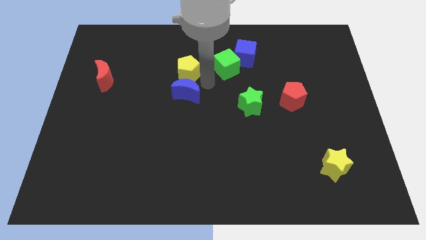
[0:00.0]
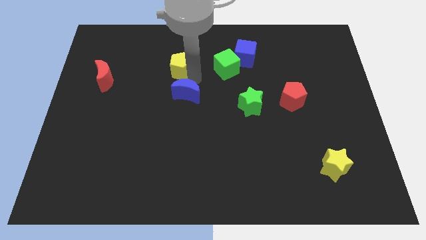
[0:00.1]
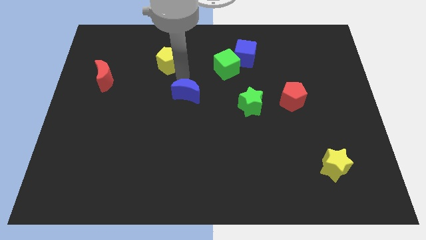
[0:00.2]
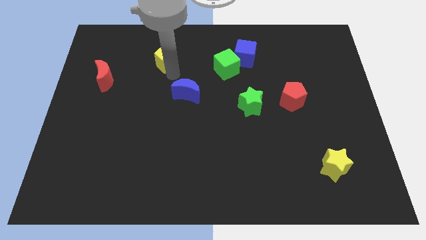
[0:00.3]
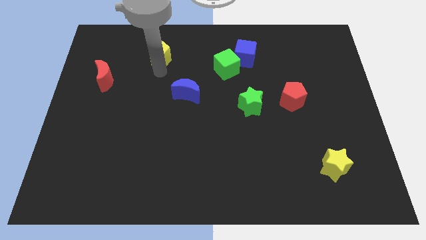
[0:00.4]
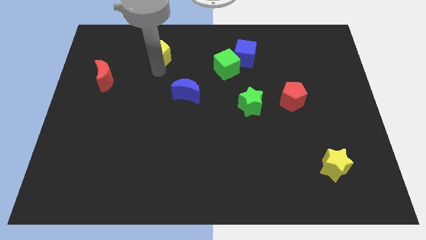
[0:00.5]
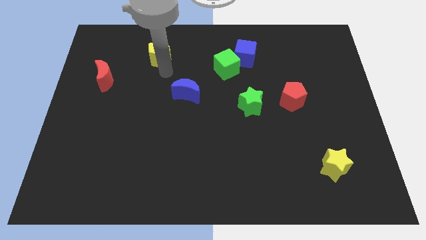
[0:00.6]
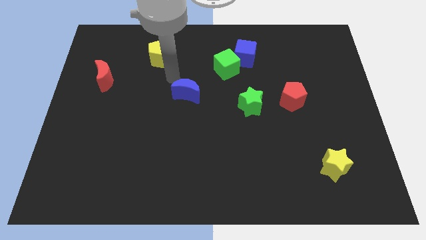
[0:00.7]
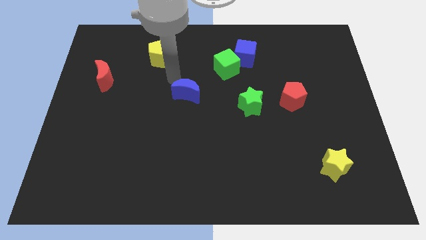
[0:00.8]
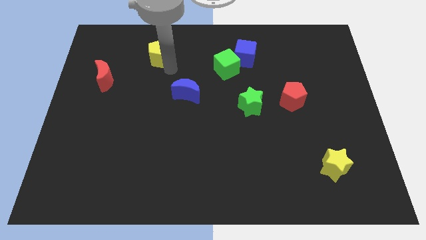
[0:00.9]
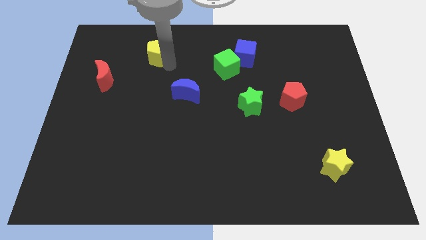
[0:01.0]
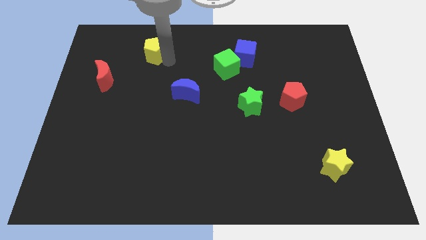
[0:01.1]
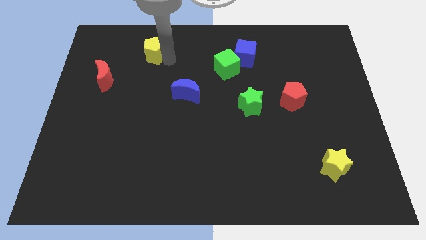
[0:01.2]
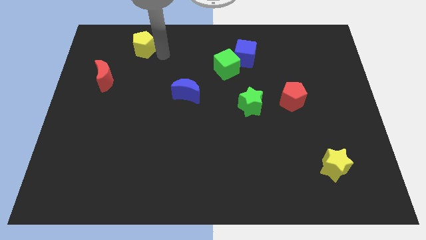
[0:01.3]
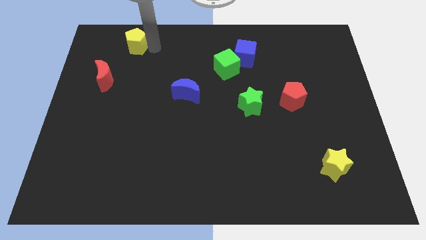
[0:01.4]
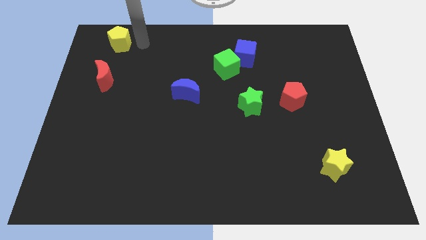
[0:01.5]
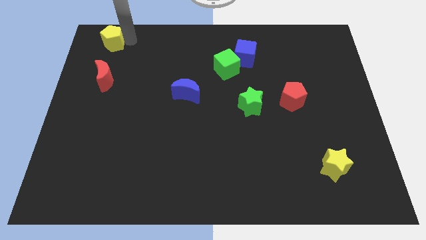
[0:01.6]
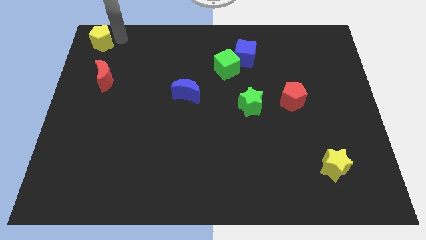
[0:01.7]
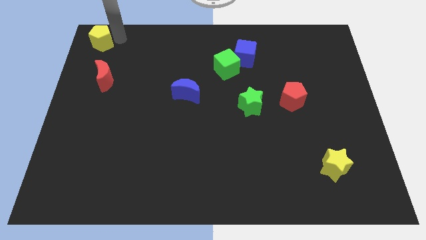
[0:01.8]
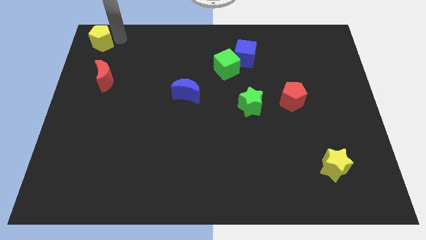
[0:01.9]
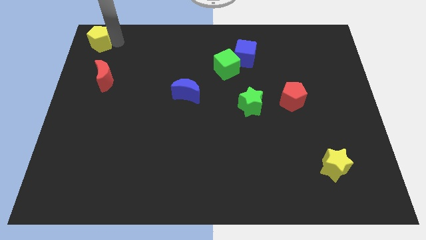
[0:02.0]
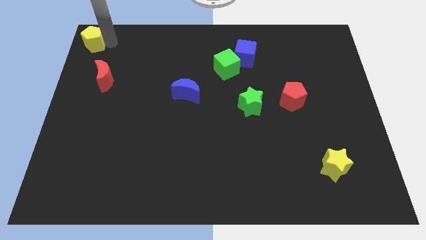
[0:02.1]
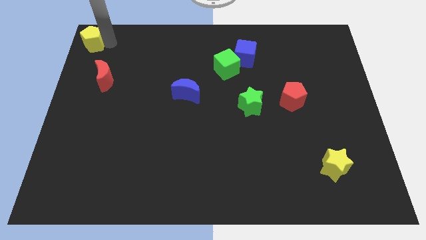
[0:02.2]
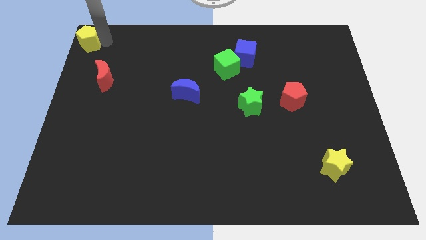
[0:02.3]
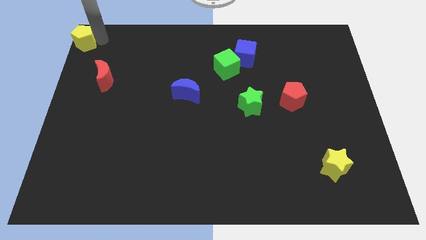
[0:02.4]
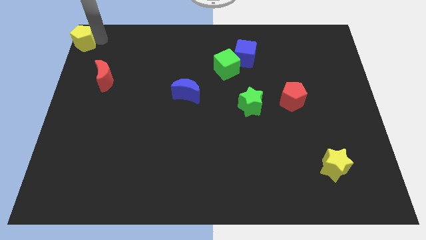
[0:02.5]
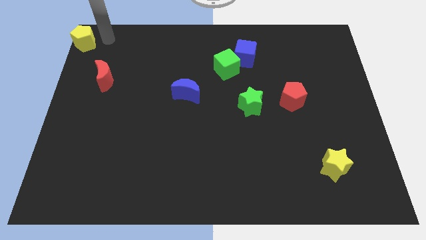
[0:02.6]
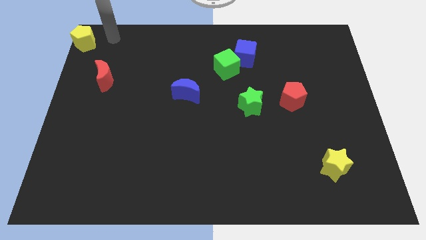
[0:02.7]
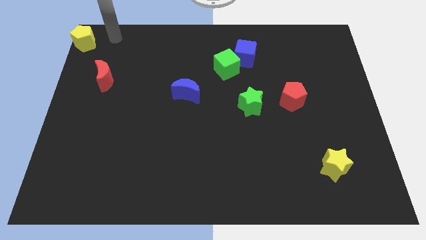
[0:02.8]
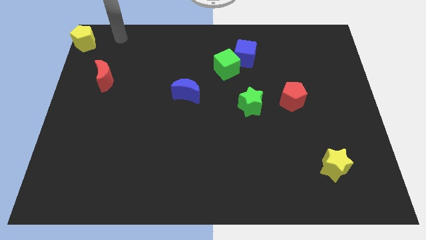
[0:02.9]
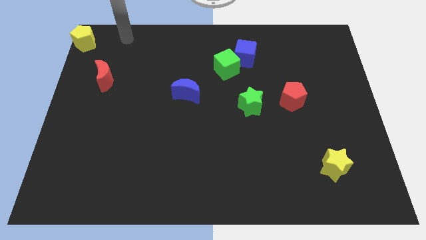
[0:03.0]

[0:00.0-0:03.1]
place the yellow pentagon at the top left corner of the board

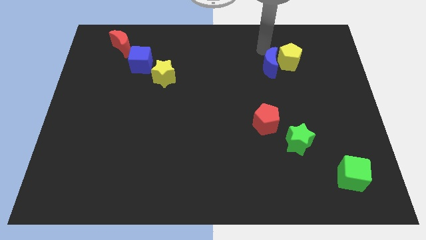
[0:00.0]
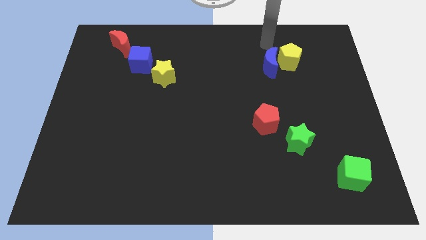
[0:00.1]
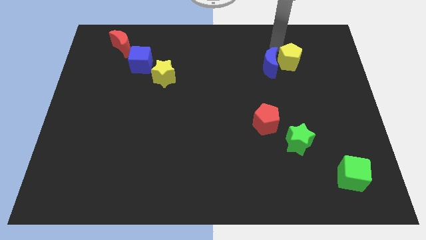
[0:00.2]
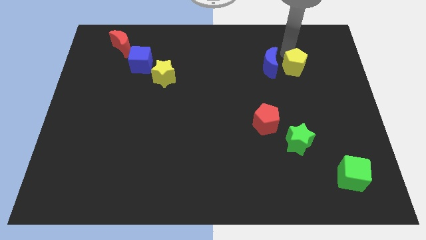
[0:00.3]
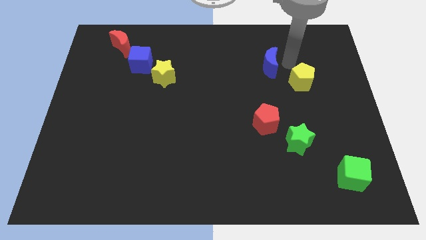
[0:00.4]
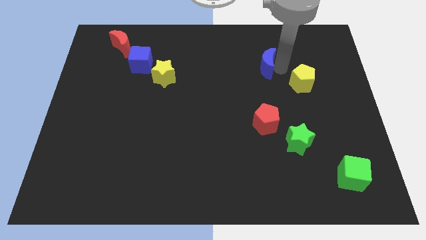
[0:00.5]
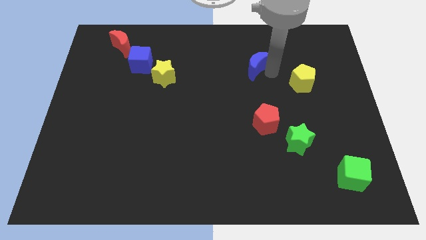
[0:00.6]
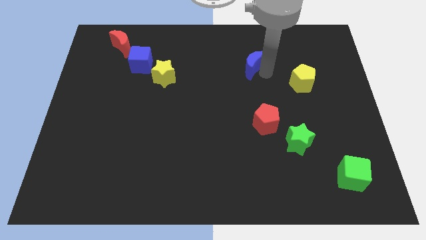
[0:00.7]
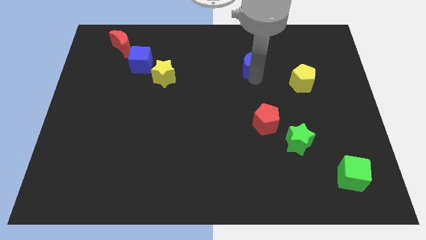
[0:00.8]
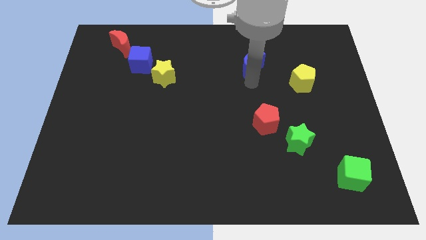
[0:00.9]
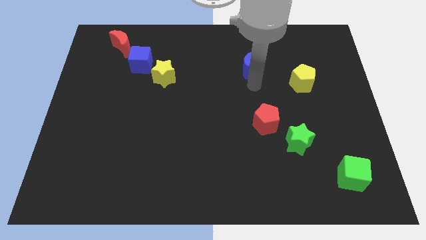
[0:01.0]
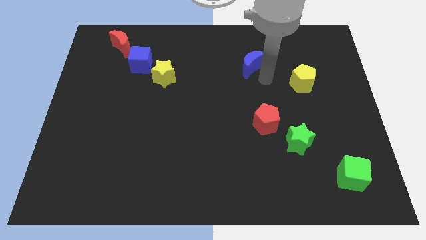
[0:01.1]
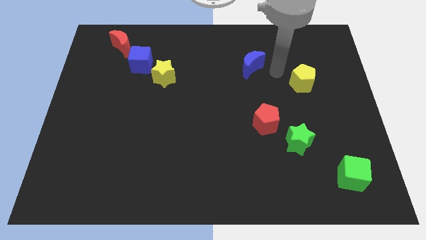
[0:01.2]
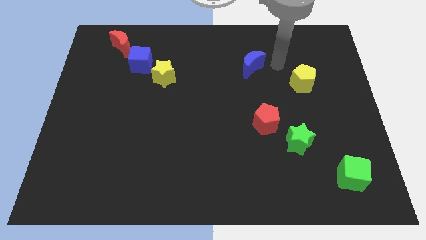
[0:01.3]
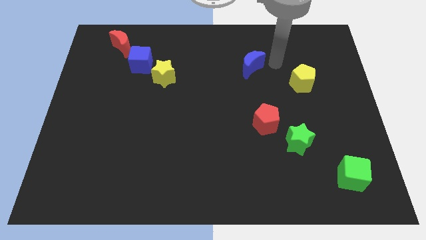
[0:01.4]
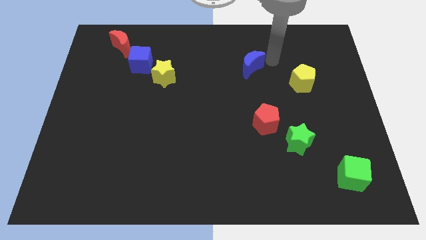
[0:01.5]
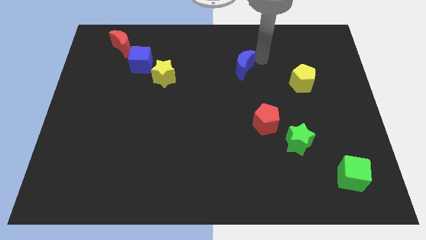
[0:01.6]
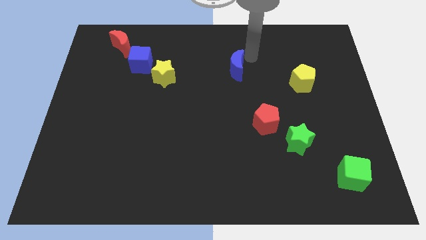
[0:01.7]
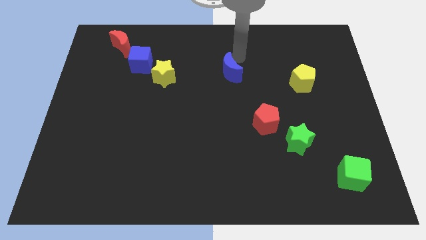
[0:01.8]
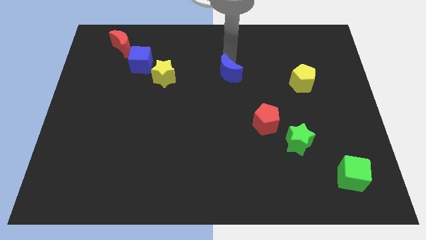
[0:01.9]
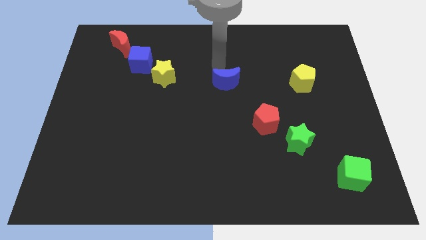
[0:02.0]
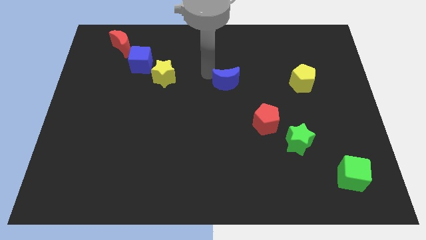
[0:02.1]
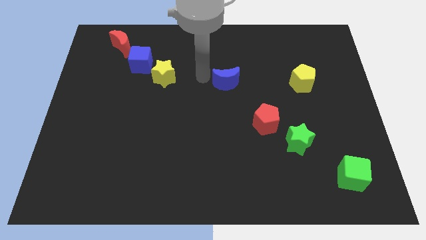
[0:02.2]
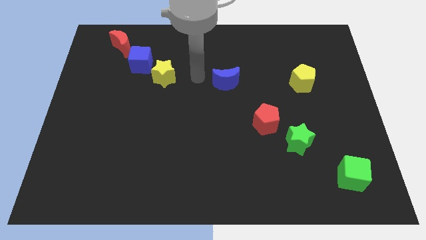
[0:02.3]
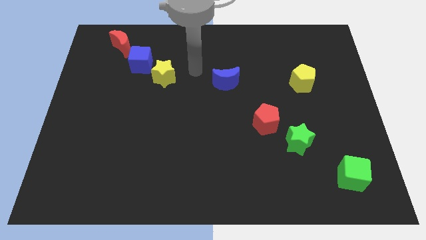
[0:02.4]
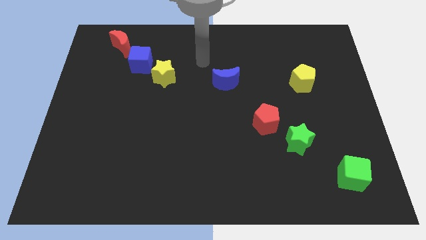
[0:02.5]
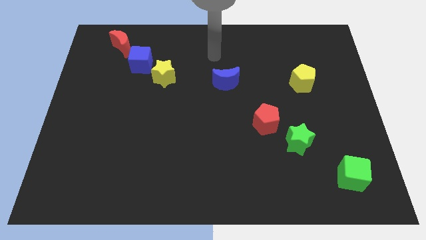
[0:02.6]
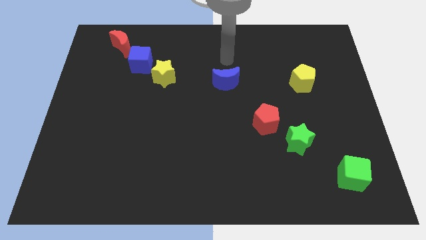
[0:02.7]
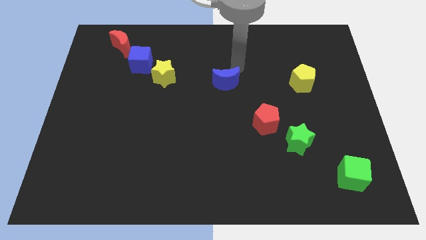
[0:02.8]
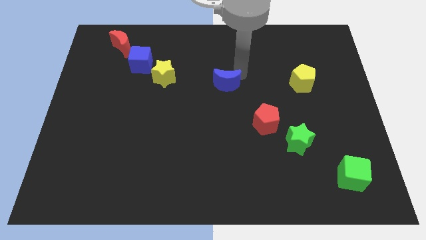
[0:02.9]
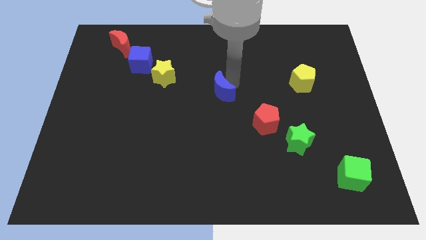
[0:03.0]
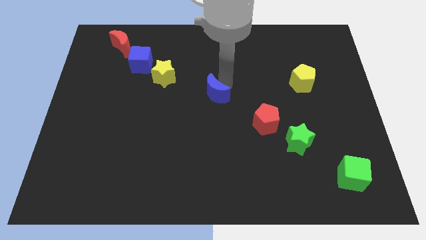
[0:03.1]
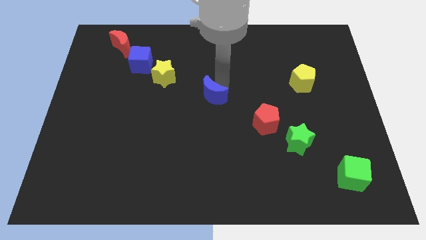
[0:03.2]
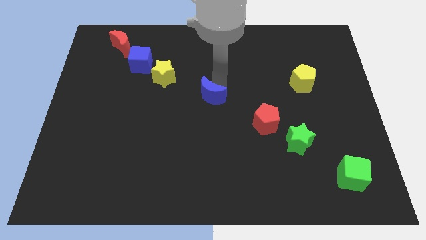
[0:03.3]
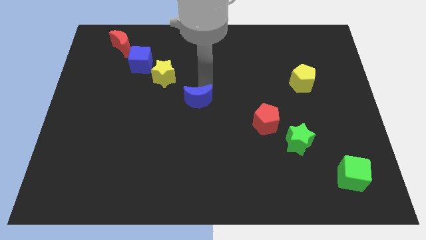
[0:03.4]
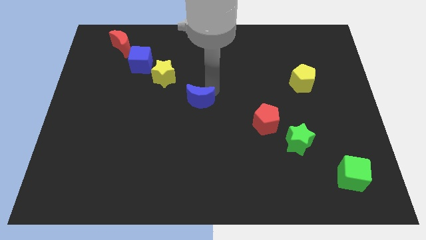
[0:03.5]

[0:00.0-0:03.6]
place the blue moon in between the yellow star and red pentagon

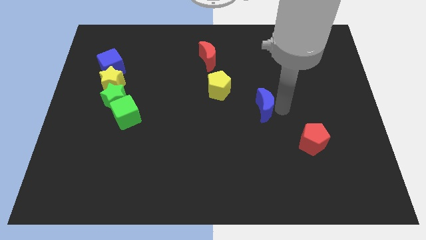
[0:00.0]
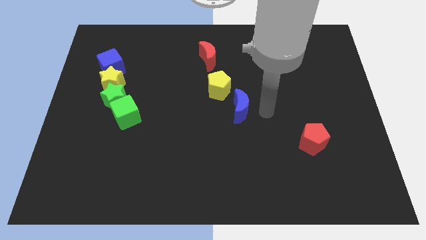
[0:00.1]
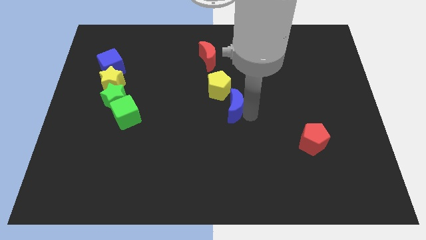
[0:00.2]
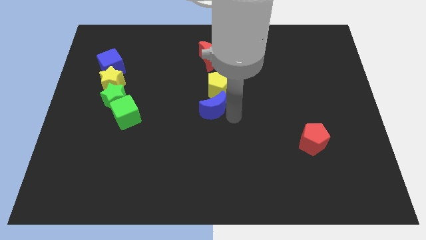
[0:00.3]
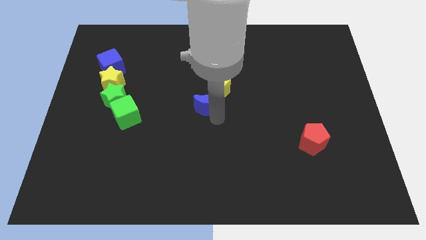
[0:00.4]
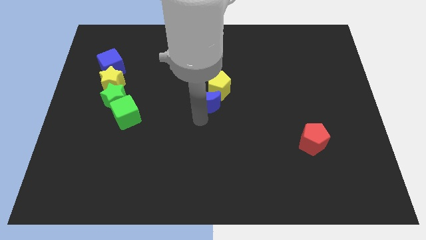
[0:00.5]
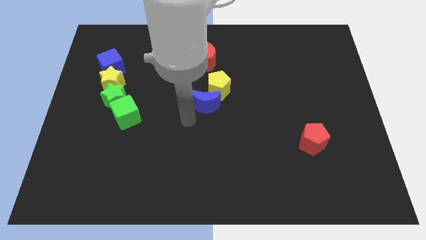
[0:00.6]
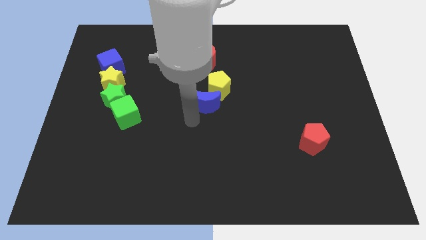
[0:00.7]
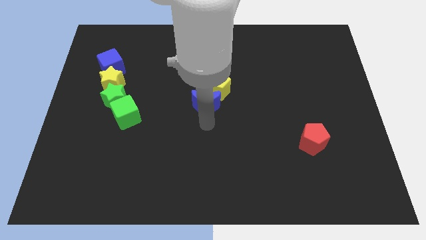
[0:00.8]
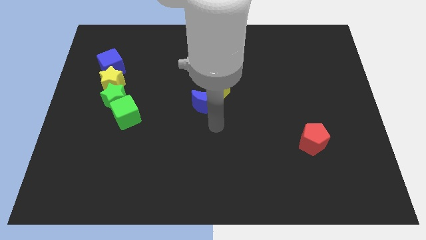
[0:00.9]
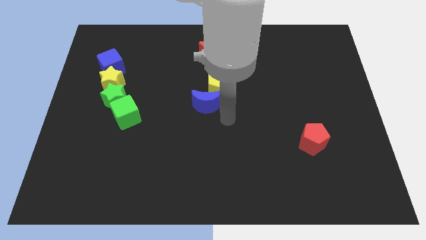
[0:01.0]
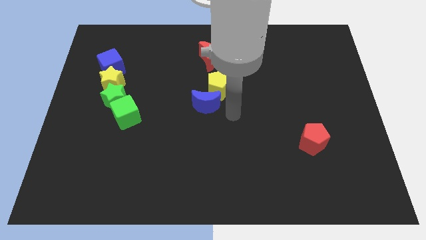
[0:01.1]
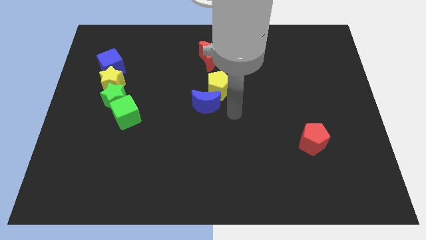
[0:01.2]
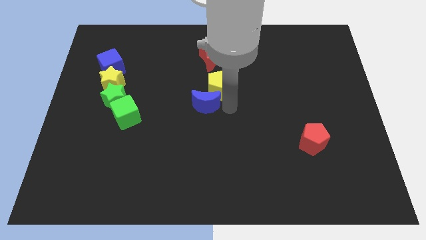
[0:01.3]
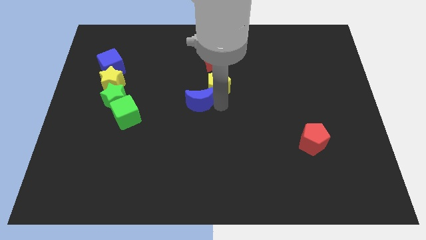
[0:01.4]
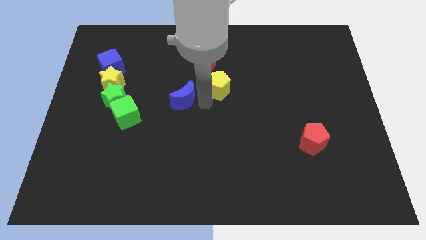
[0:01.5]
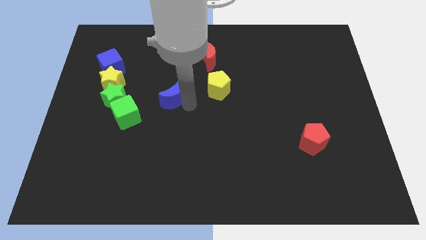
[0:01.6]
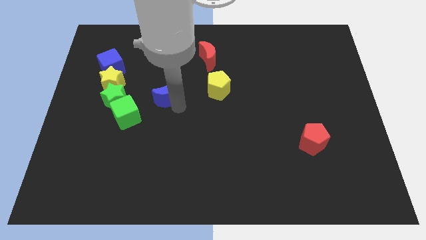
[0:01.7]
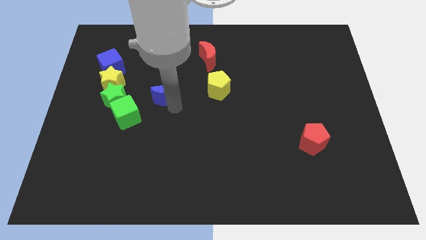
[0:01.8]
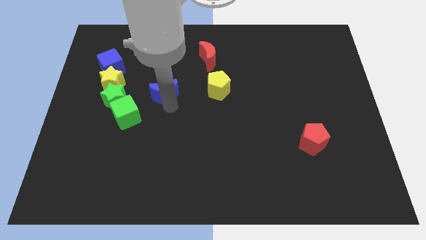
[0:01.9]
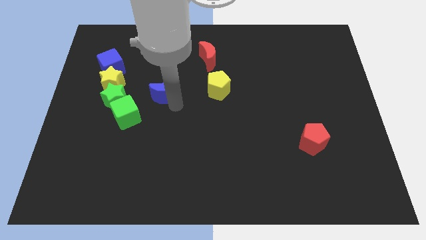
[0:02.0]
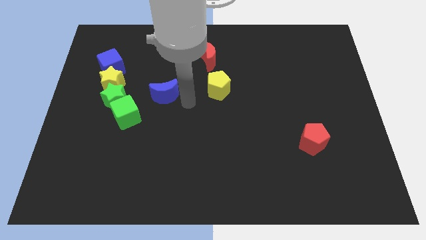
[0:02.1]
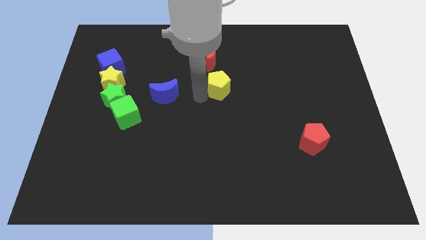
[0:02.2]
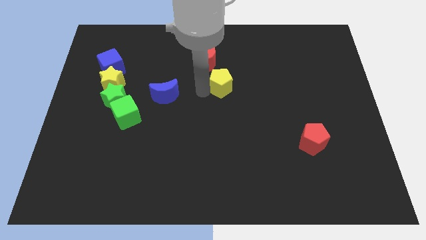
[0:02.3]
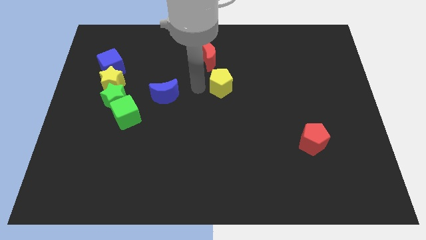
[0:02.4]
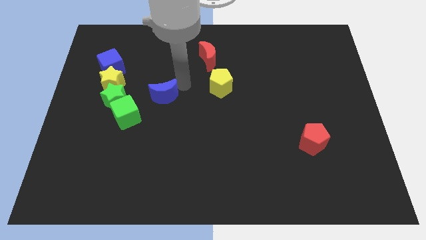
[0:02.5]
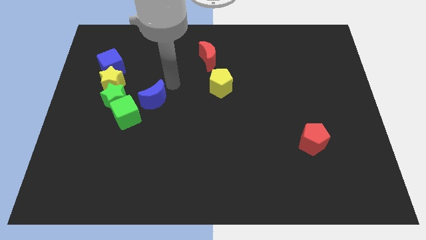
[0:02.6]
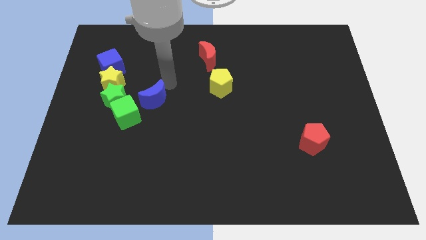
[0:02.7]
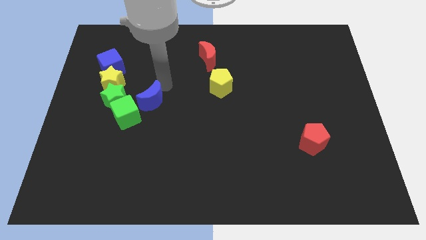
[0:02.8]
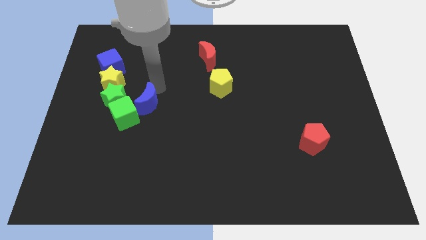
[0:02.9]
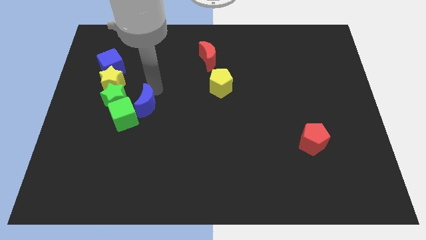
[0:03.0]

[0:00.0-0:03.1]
drag the blue moon into the right side of the green cube
